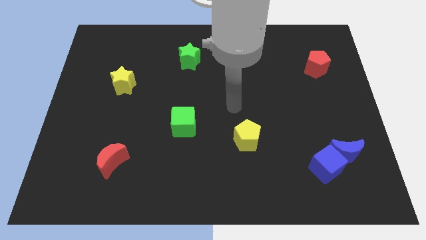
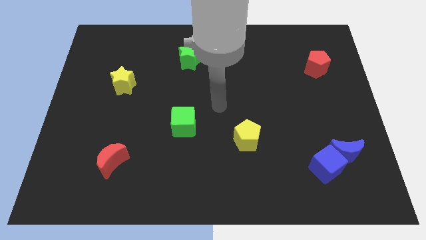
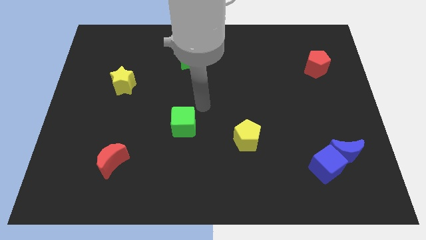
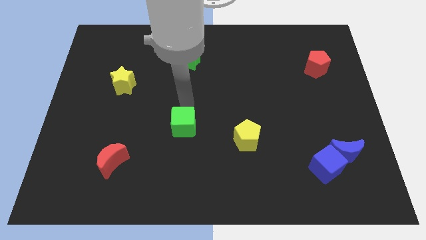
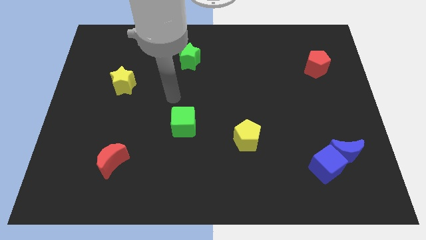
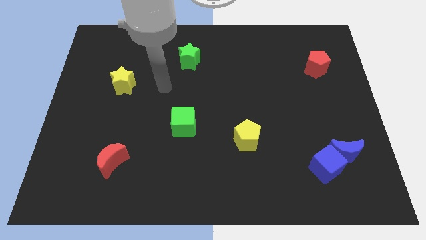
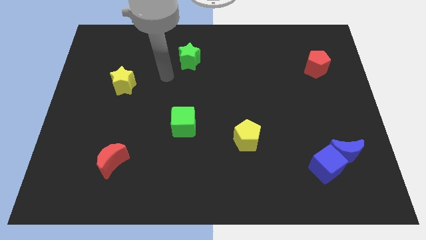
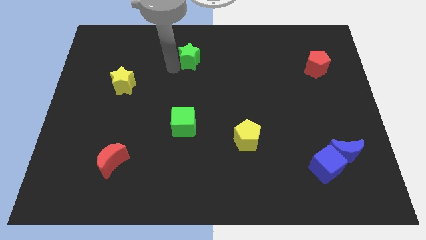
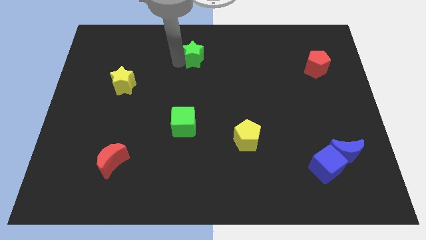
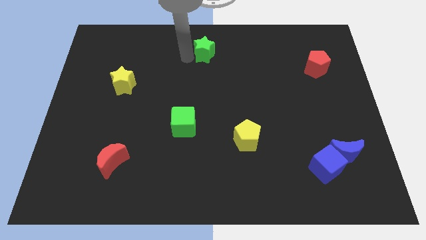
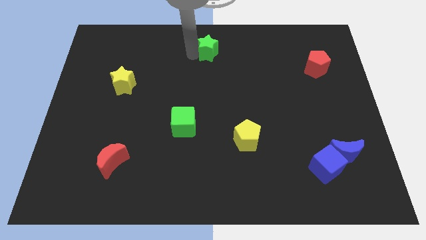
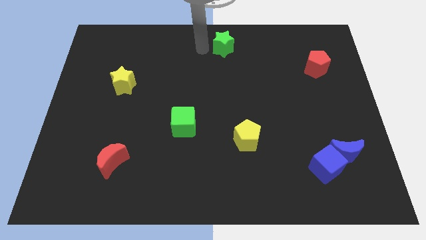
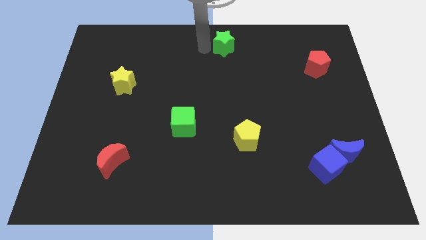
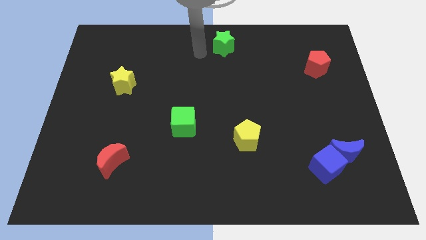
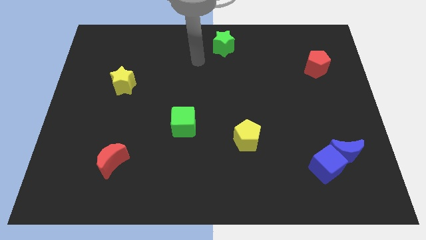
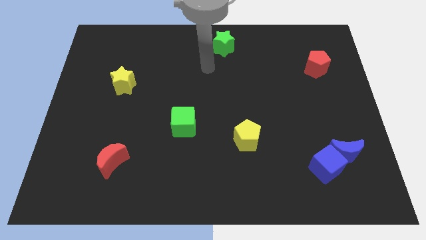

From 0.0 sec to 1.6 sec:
push the green star towards the top right side of the board

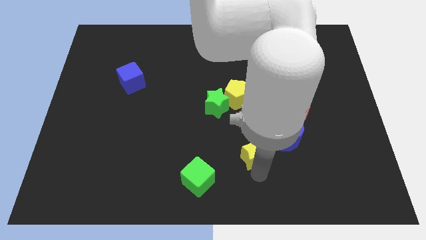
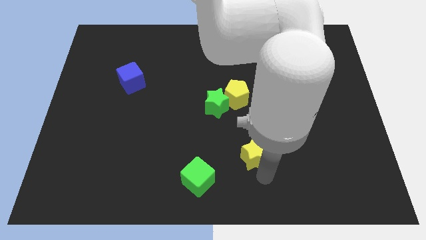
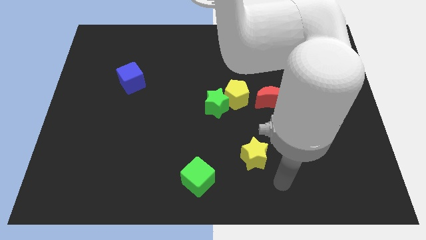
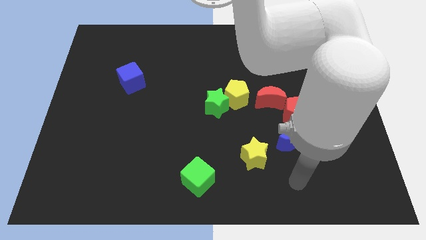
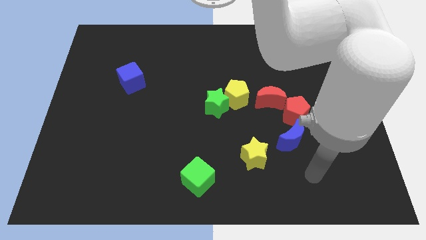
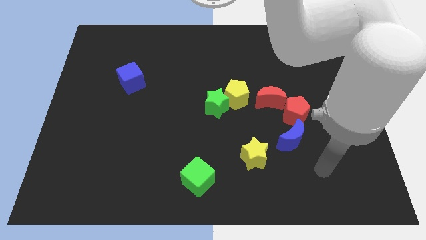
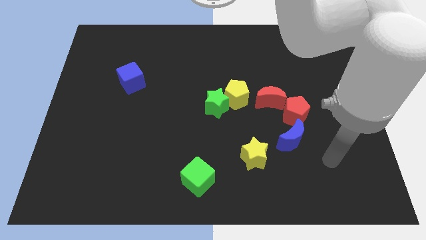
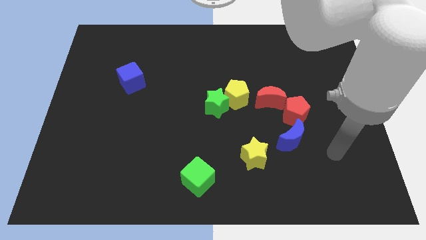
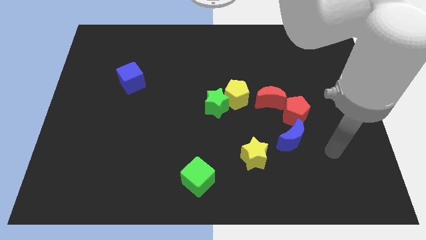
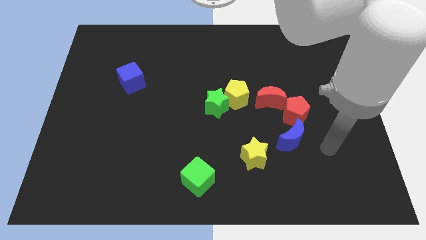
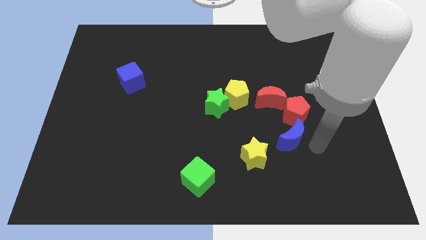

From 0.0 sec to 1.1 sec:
place your arm at the right of the blue crescent

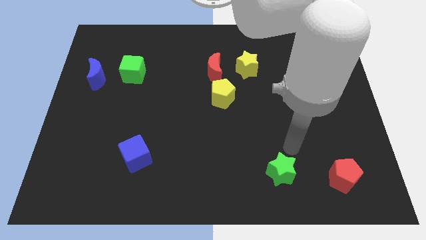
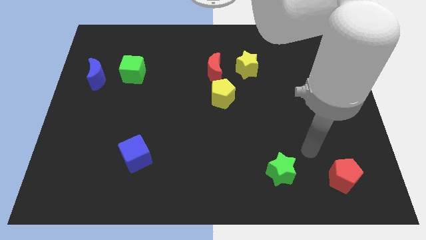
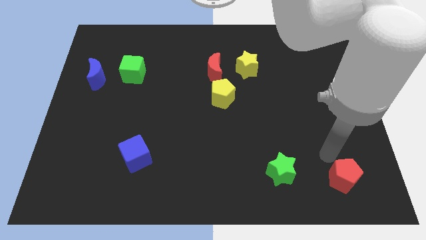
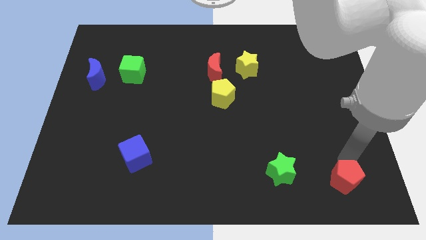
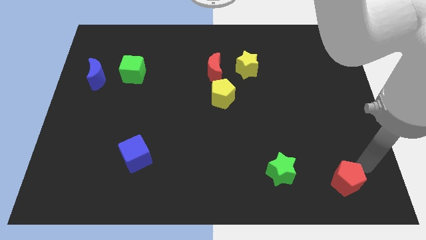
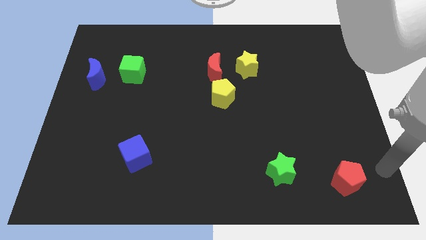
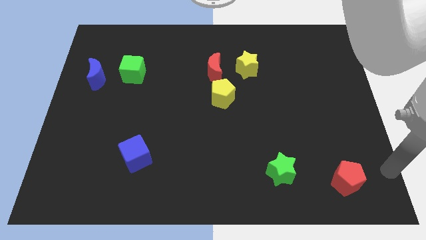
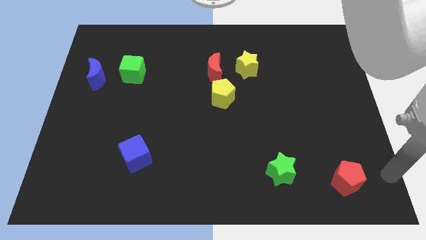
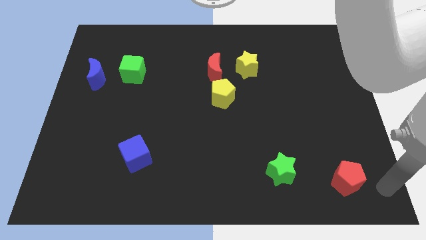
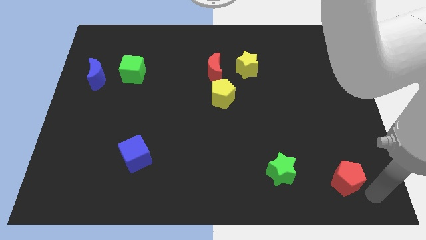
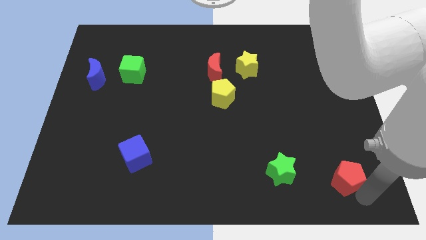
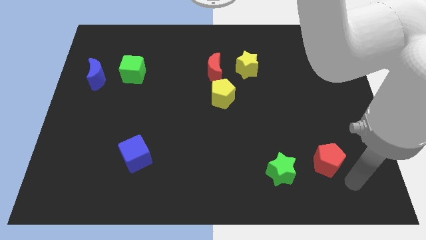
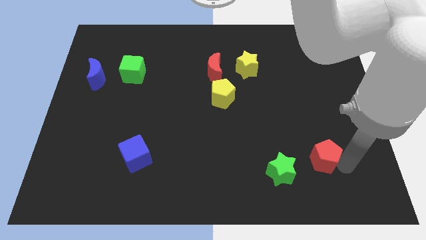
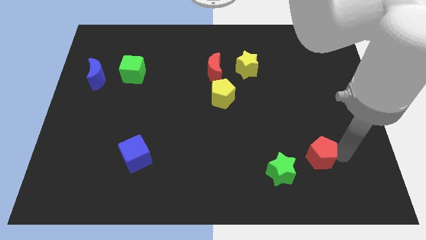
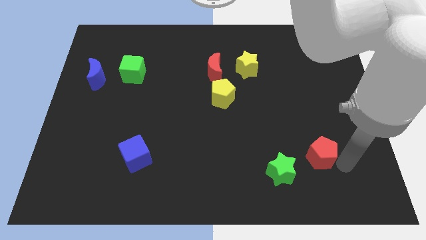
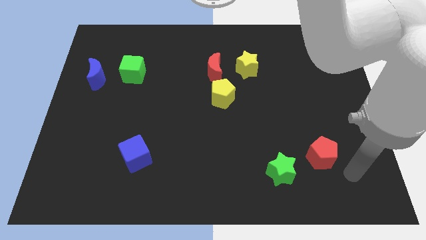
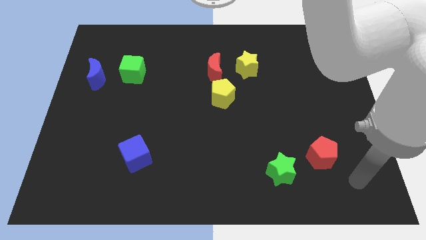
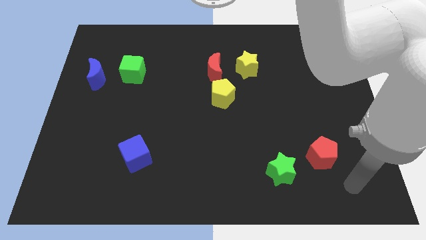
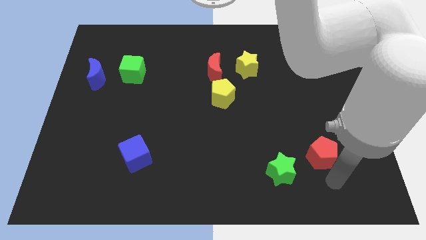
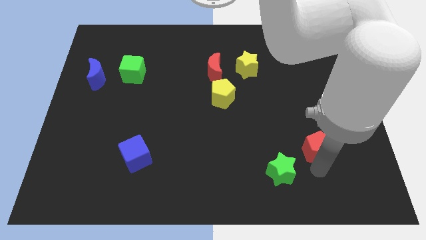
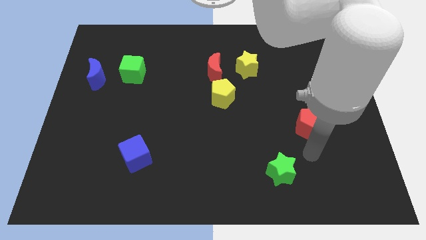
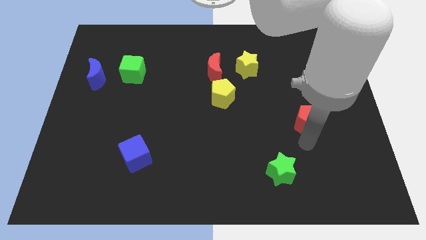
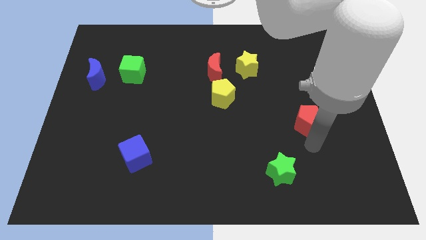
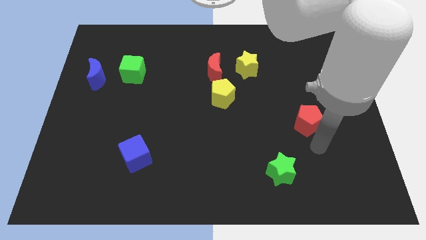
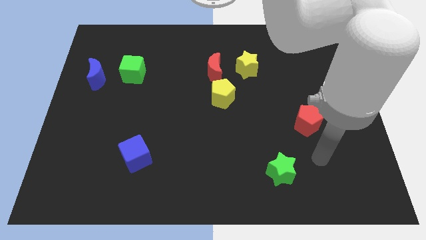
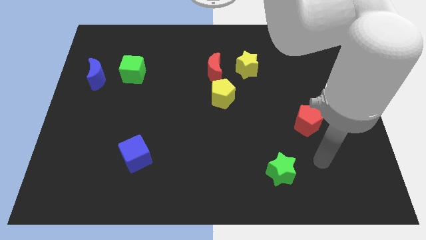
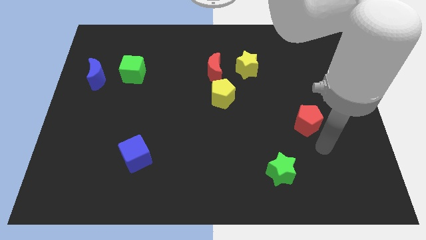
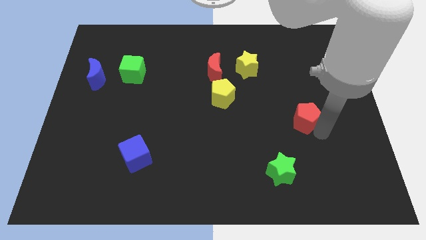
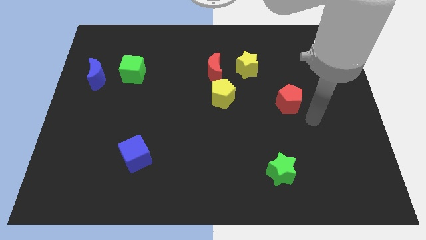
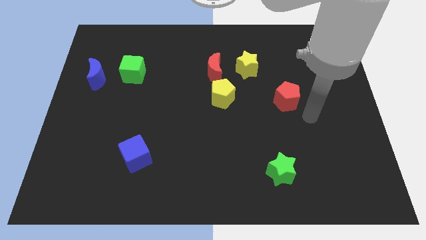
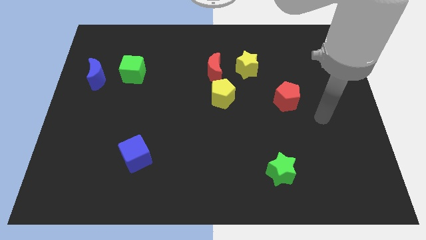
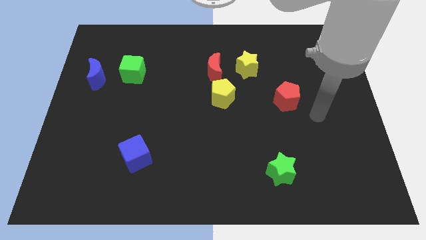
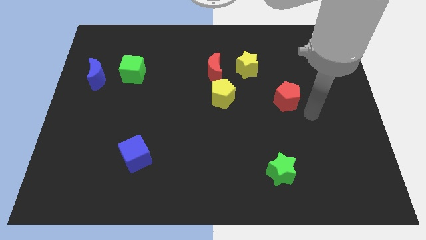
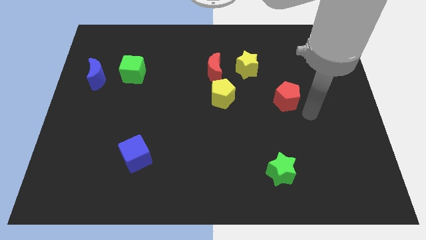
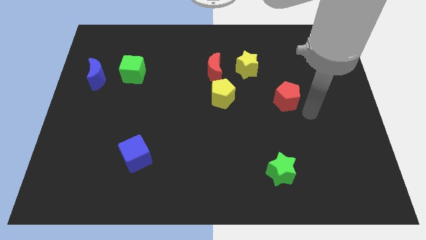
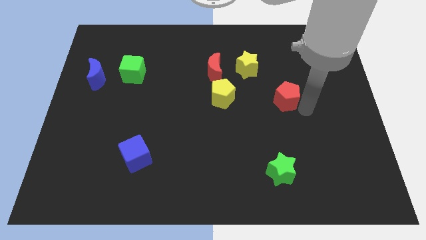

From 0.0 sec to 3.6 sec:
push the red pentagon to the horizontal right of the yellow pentagon

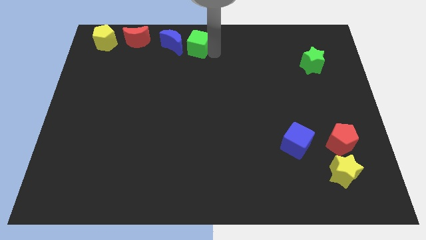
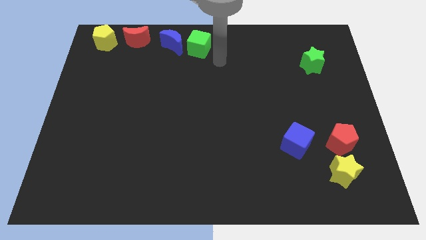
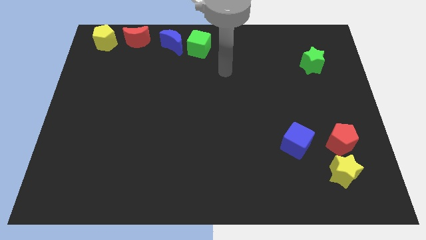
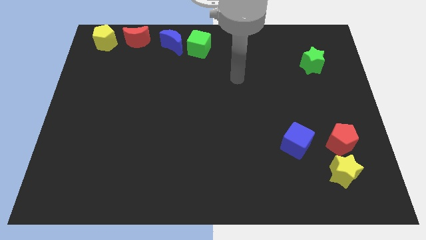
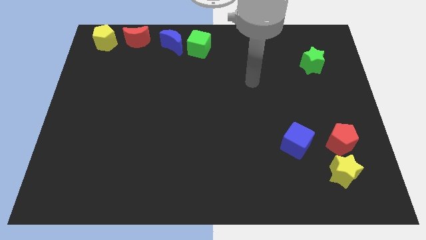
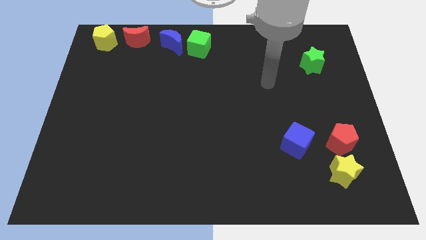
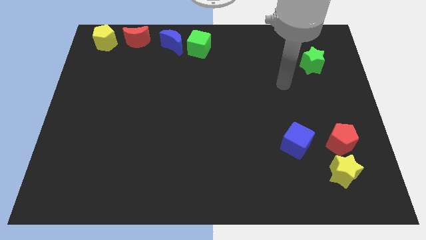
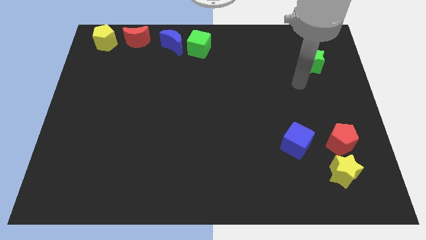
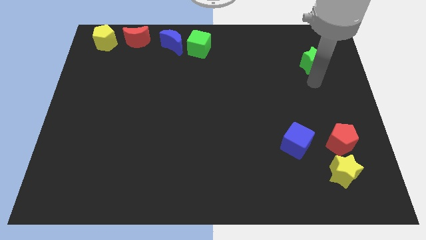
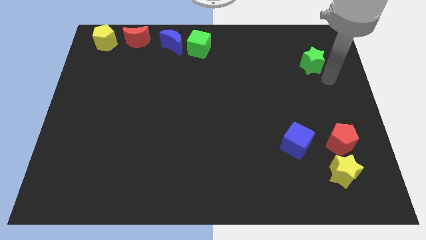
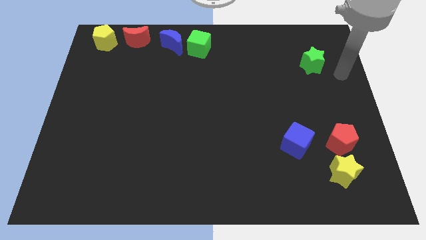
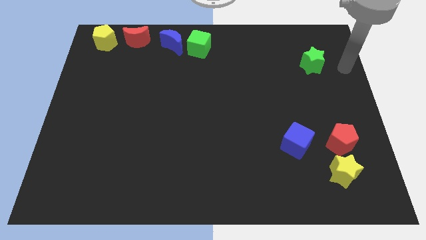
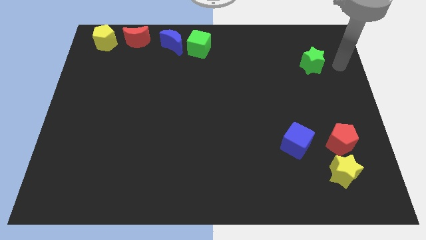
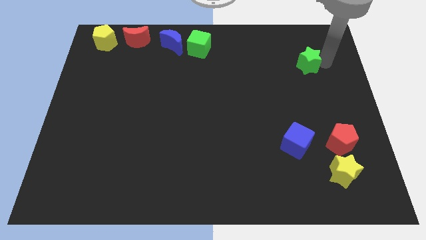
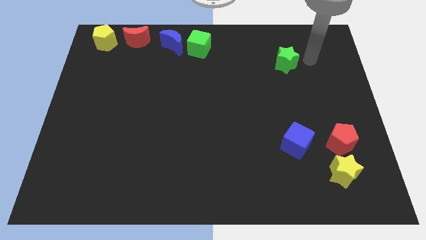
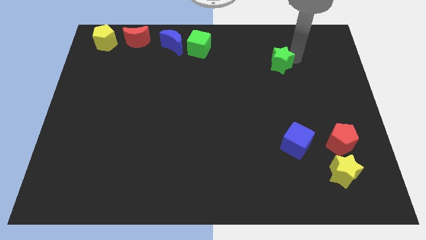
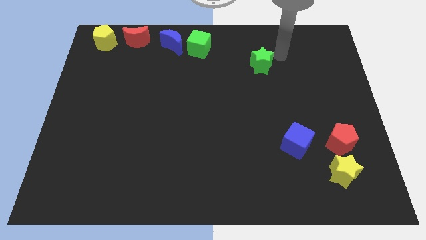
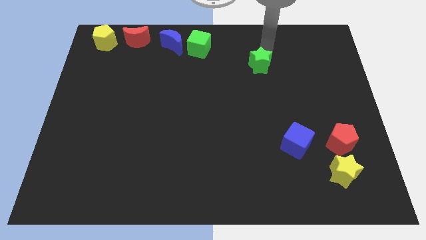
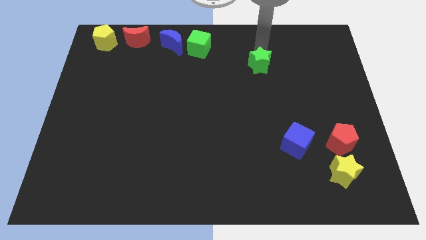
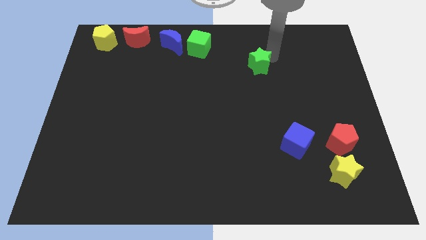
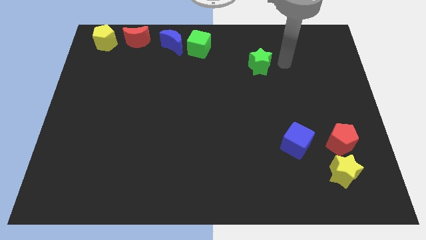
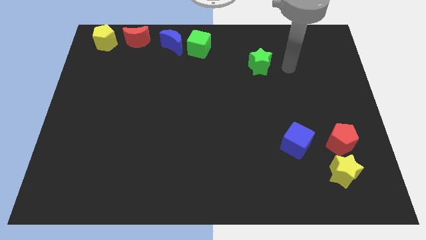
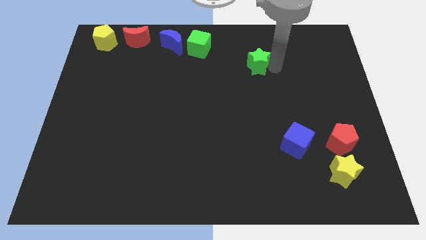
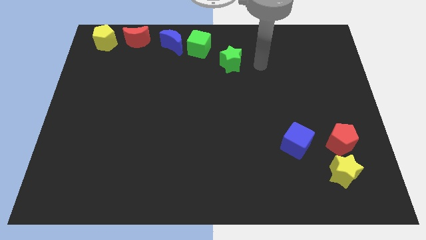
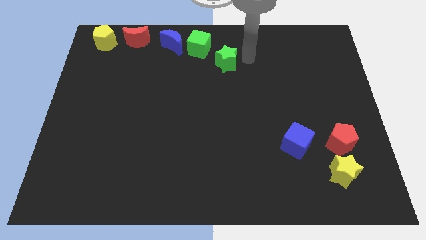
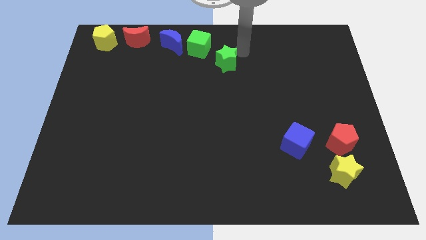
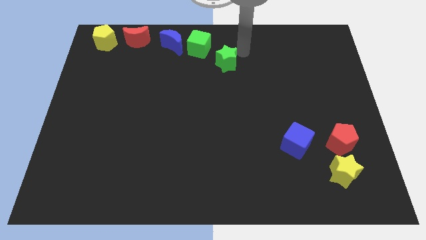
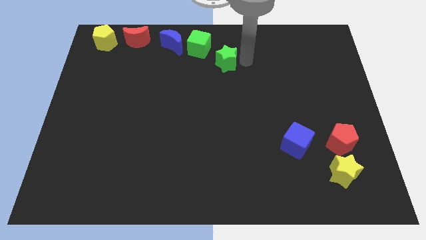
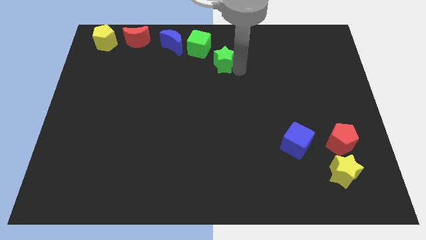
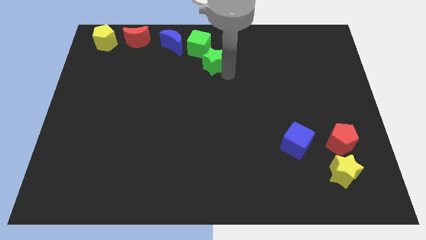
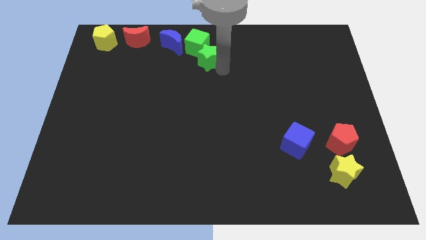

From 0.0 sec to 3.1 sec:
drag the green star into the bottom right side of the green cube
